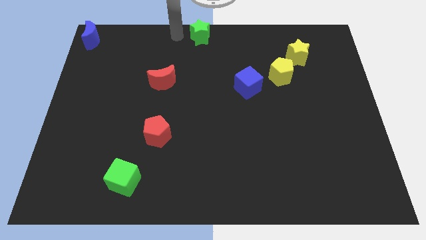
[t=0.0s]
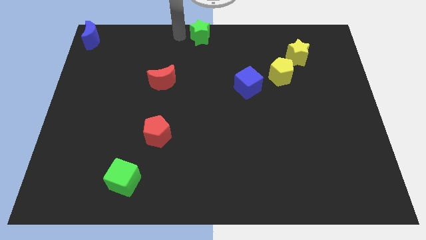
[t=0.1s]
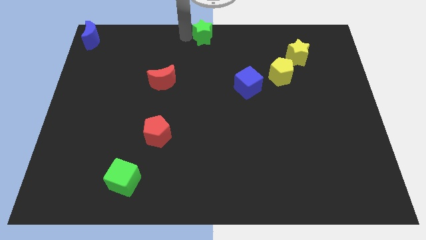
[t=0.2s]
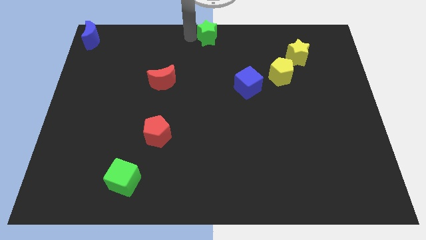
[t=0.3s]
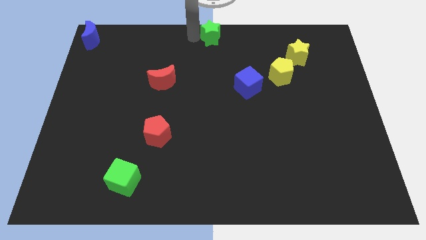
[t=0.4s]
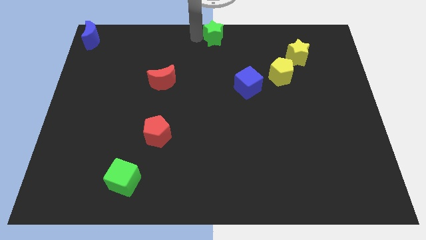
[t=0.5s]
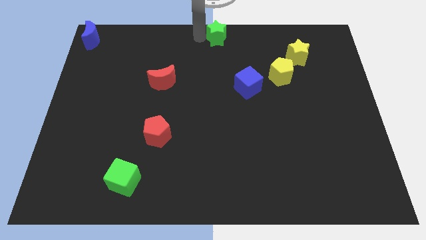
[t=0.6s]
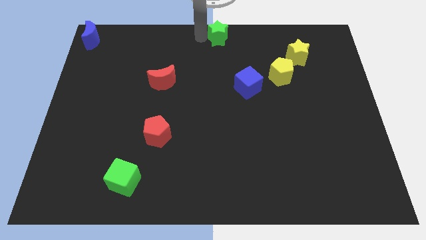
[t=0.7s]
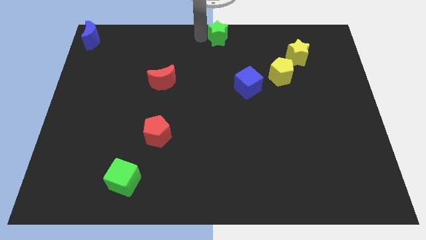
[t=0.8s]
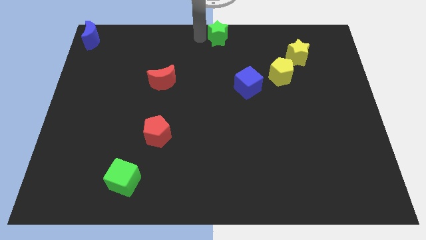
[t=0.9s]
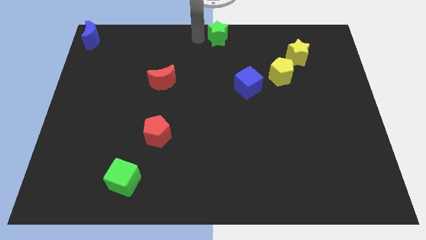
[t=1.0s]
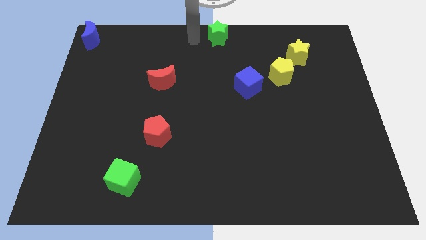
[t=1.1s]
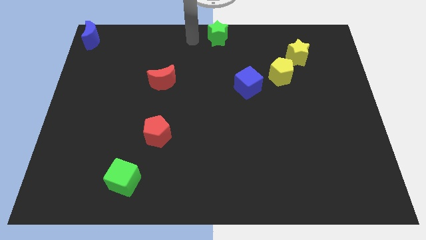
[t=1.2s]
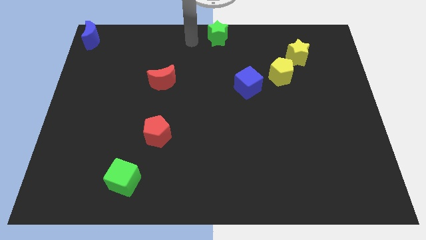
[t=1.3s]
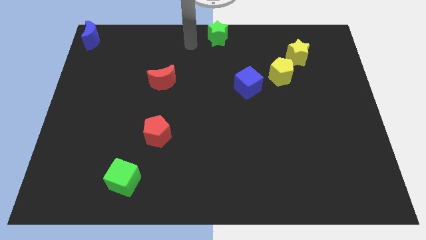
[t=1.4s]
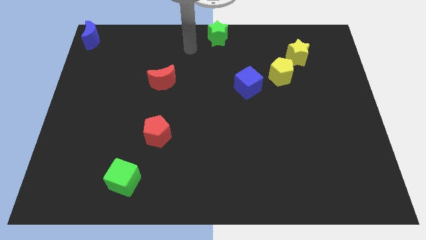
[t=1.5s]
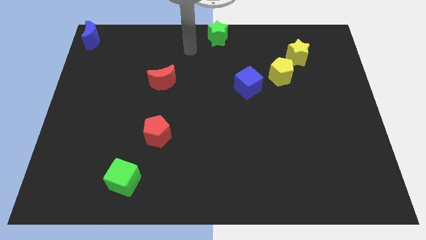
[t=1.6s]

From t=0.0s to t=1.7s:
place the green star at the top center of the board

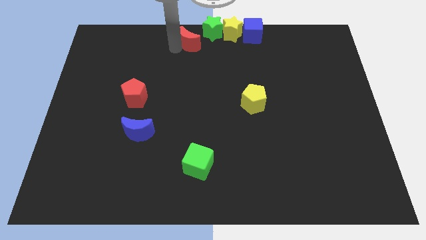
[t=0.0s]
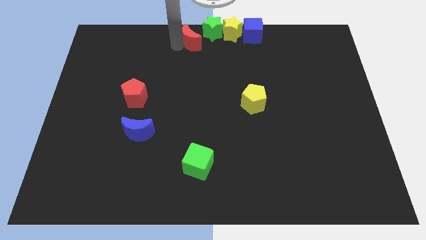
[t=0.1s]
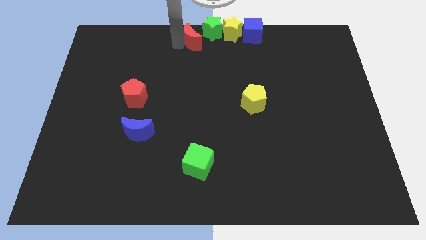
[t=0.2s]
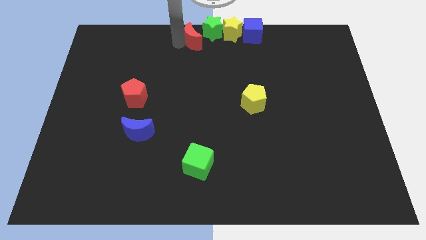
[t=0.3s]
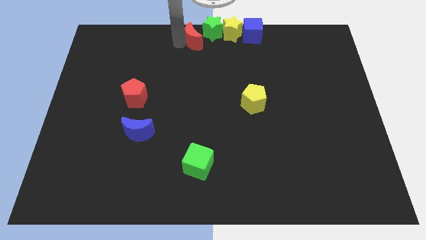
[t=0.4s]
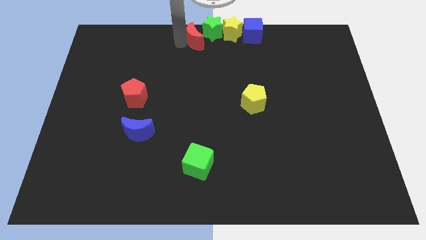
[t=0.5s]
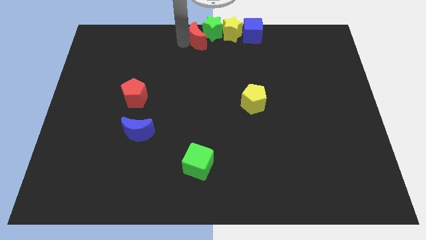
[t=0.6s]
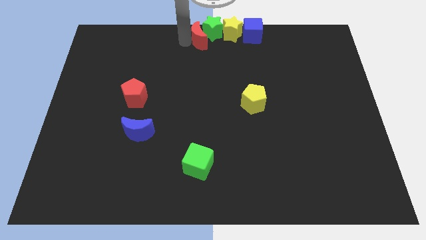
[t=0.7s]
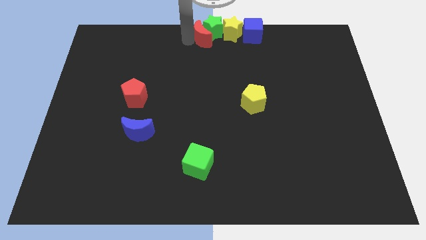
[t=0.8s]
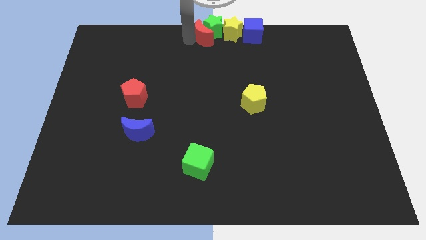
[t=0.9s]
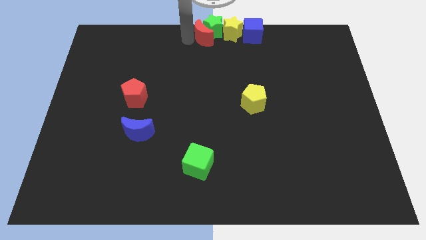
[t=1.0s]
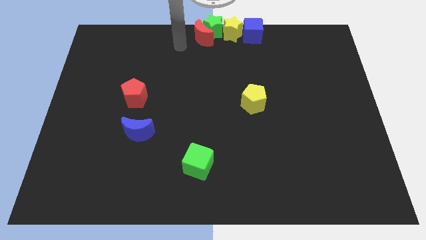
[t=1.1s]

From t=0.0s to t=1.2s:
push red crescent in to green star

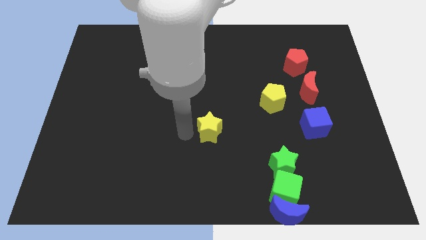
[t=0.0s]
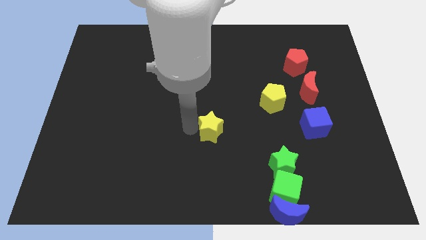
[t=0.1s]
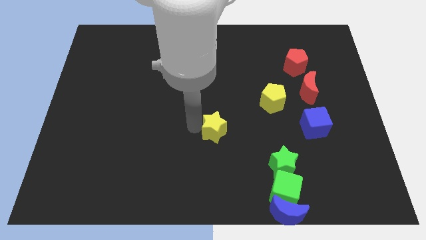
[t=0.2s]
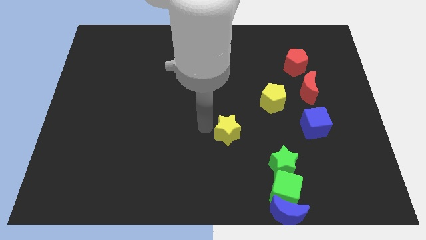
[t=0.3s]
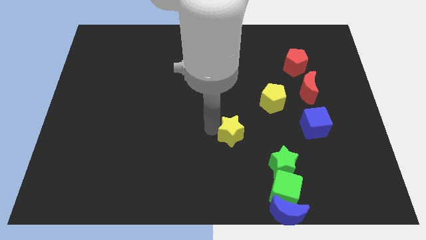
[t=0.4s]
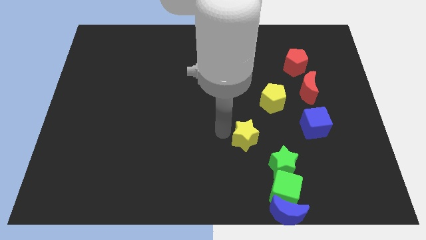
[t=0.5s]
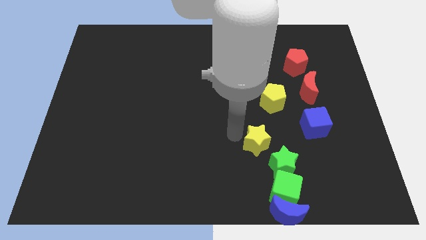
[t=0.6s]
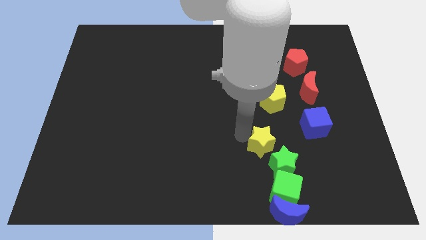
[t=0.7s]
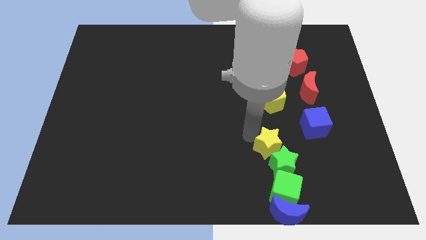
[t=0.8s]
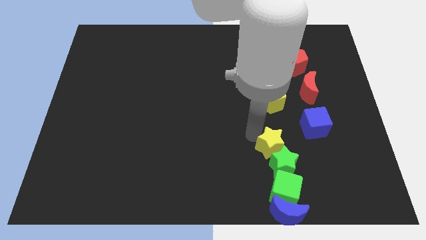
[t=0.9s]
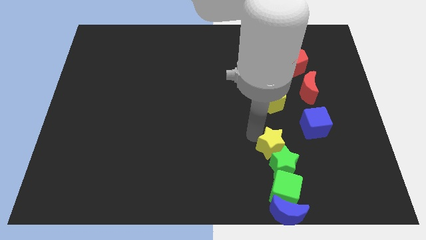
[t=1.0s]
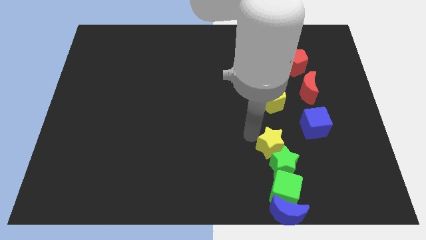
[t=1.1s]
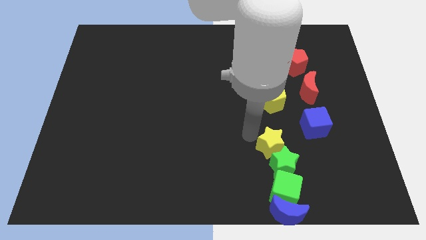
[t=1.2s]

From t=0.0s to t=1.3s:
move the yellow star to the top left of the green star

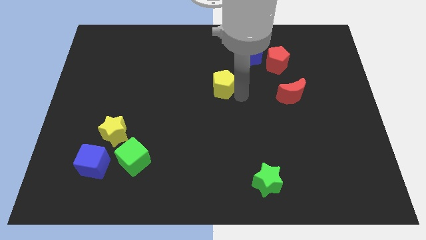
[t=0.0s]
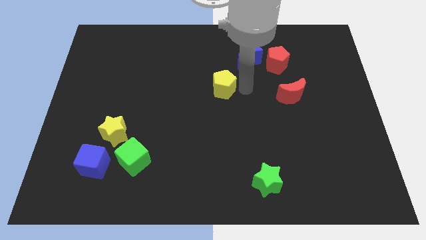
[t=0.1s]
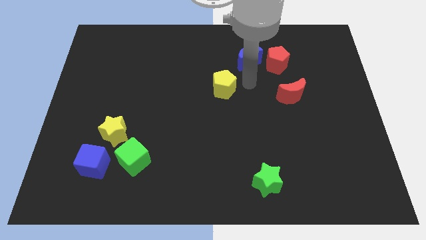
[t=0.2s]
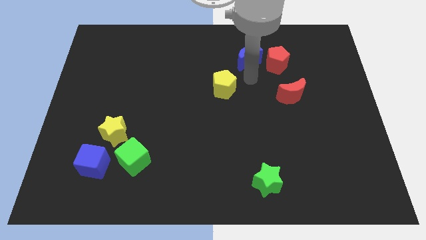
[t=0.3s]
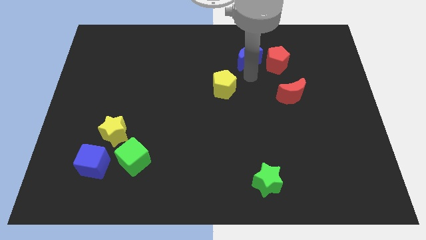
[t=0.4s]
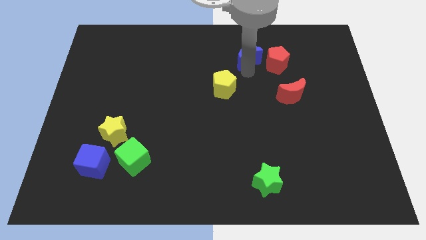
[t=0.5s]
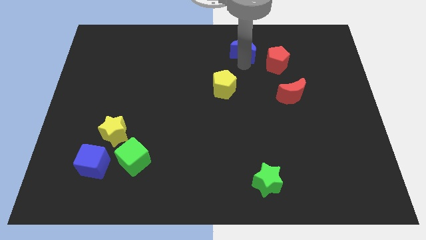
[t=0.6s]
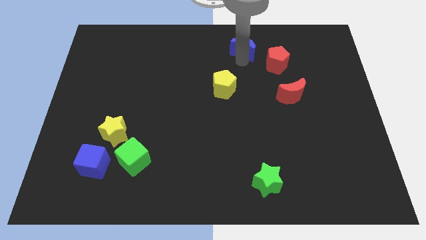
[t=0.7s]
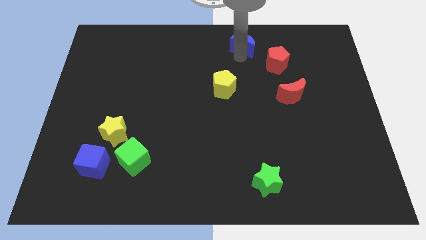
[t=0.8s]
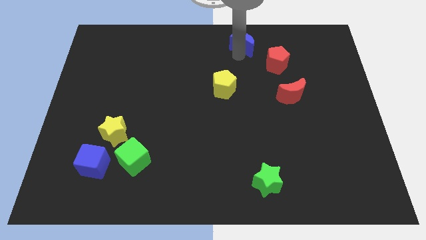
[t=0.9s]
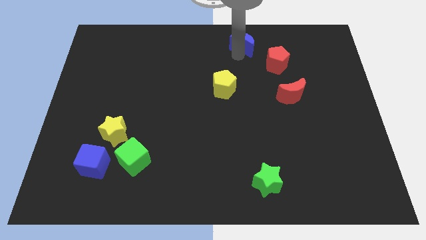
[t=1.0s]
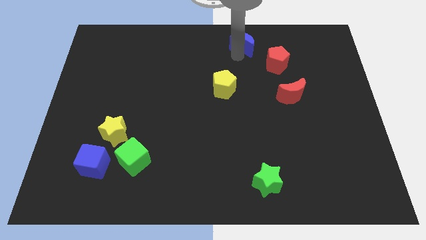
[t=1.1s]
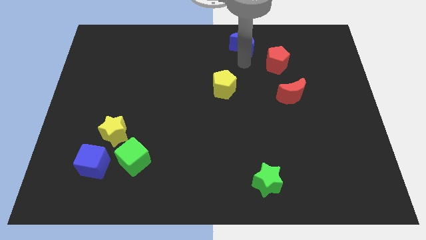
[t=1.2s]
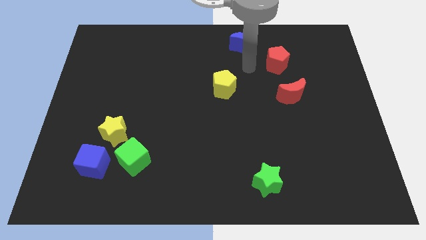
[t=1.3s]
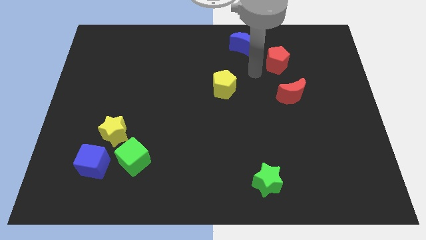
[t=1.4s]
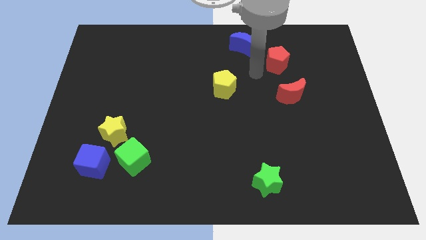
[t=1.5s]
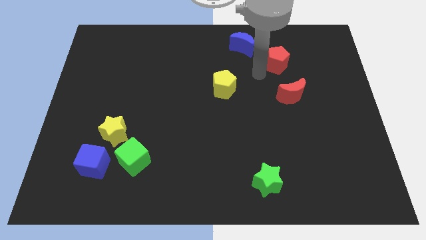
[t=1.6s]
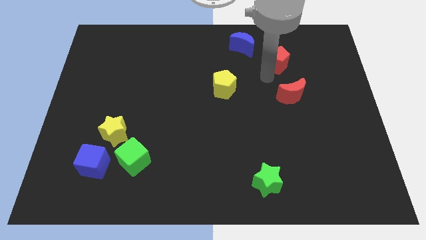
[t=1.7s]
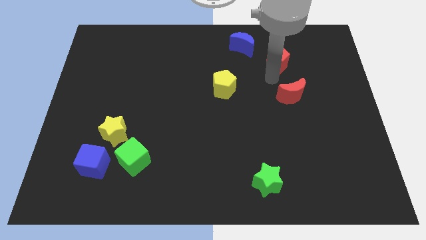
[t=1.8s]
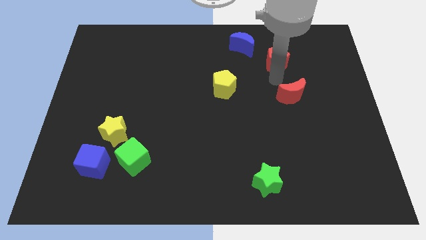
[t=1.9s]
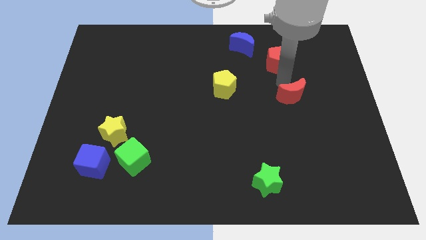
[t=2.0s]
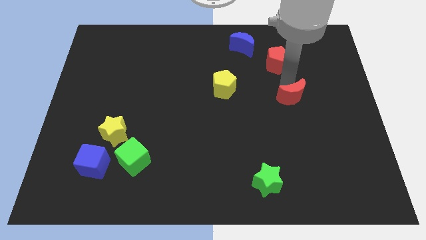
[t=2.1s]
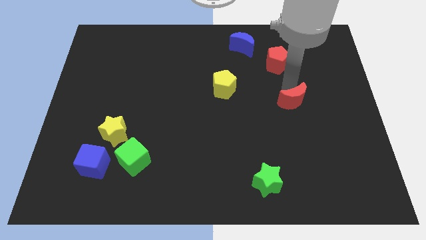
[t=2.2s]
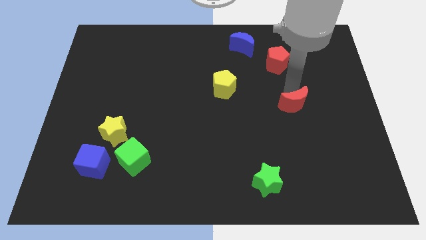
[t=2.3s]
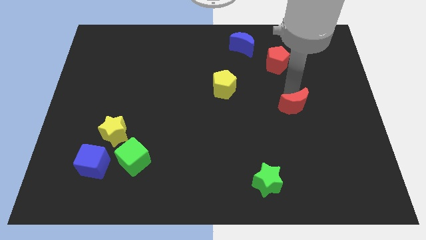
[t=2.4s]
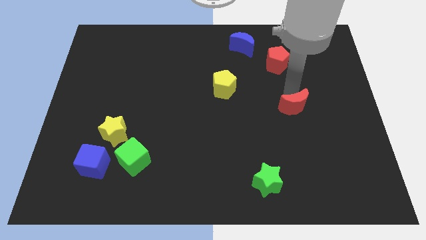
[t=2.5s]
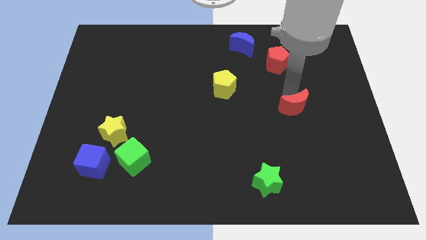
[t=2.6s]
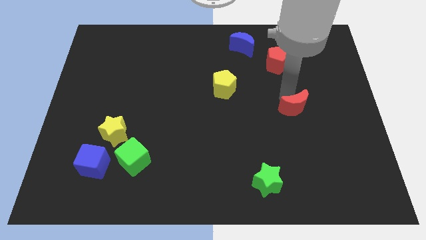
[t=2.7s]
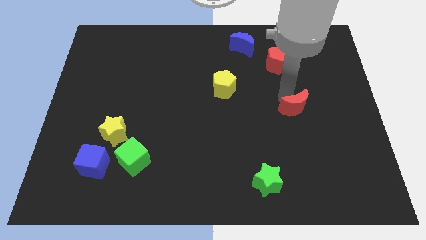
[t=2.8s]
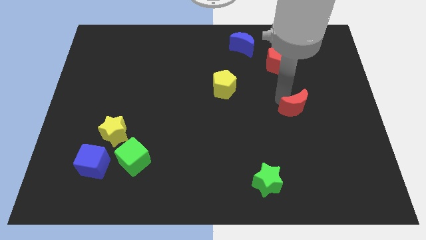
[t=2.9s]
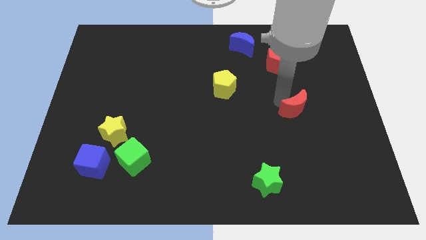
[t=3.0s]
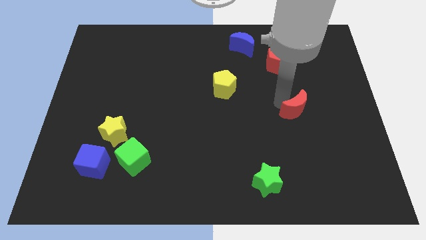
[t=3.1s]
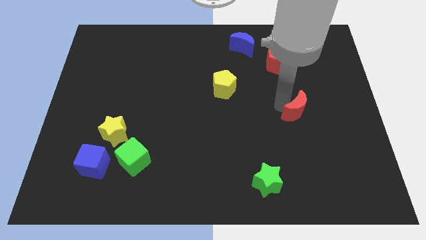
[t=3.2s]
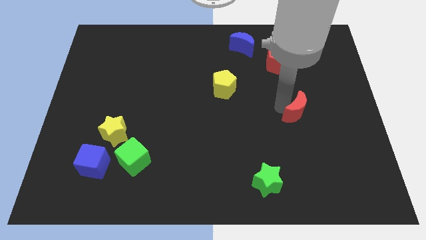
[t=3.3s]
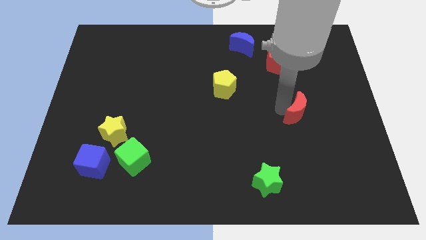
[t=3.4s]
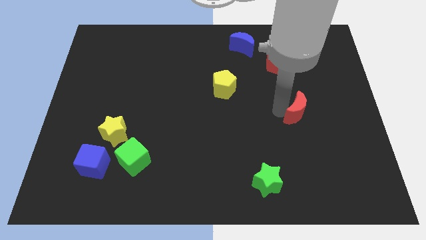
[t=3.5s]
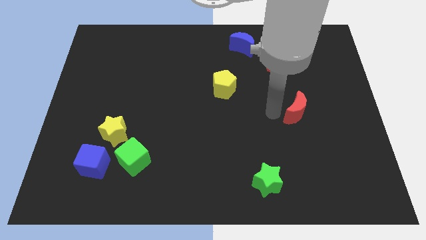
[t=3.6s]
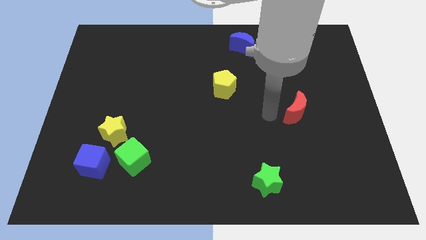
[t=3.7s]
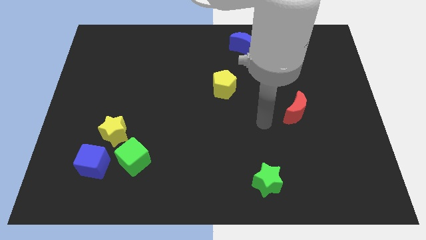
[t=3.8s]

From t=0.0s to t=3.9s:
move the blue moon and red moon diagonal to each other

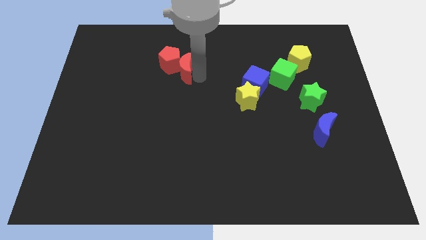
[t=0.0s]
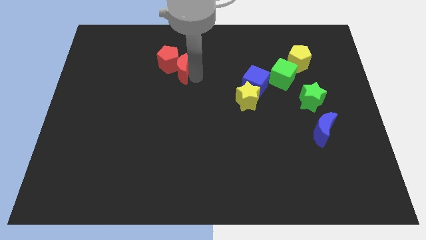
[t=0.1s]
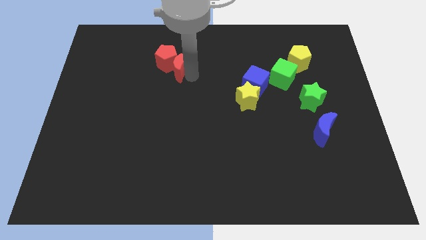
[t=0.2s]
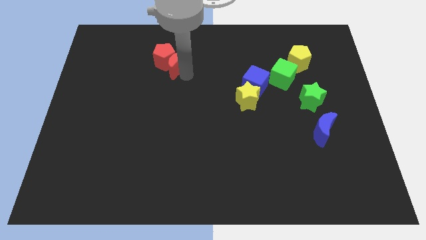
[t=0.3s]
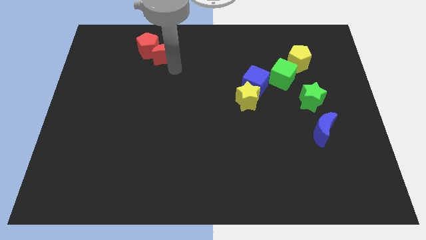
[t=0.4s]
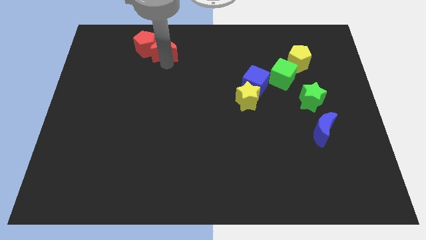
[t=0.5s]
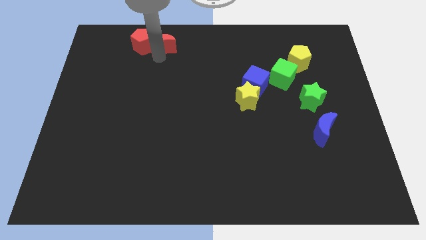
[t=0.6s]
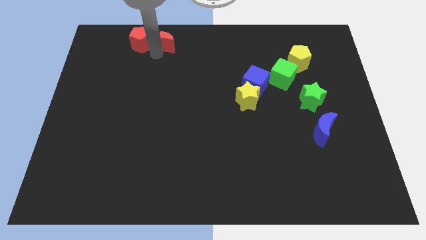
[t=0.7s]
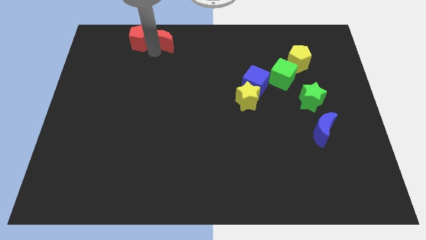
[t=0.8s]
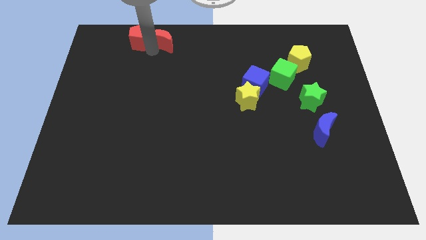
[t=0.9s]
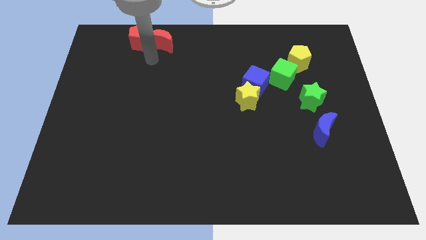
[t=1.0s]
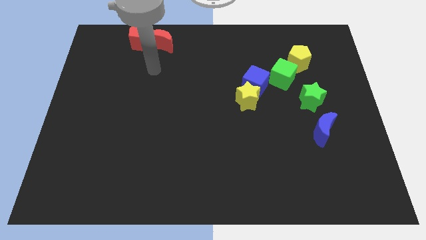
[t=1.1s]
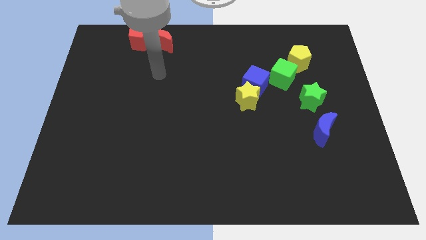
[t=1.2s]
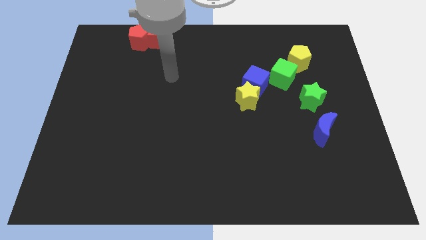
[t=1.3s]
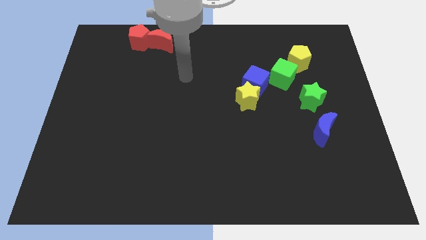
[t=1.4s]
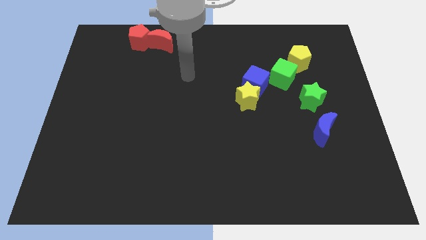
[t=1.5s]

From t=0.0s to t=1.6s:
push the red blocks towards the top right left of the board
